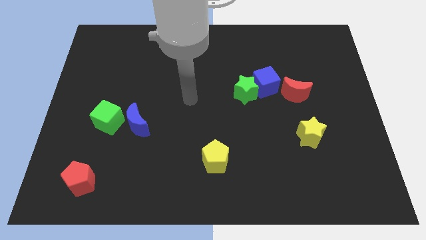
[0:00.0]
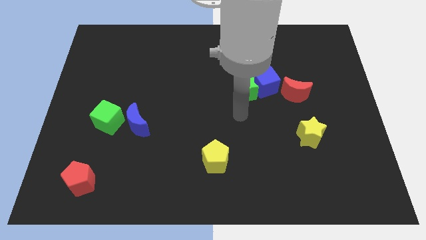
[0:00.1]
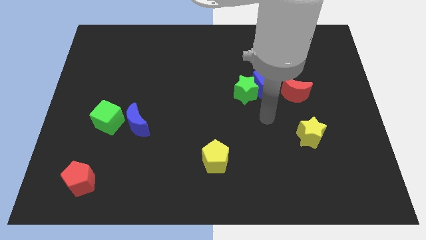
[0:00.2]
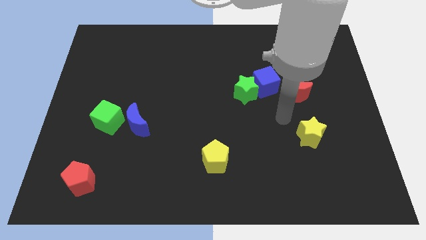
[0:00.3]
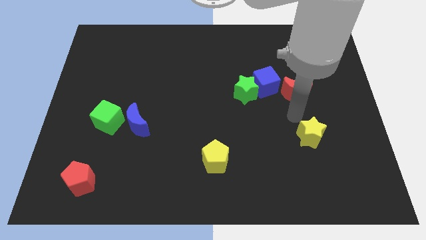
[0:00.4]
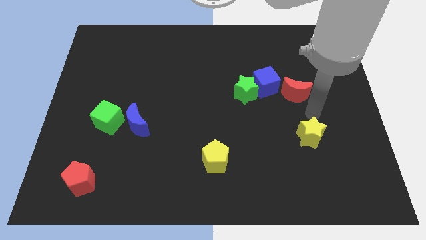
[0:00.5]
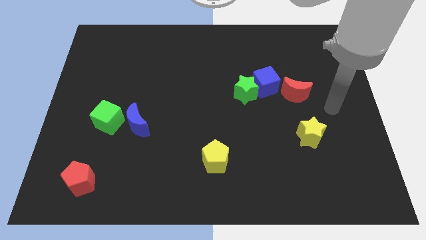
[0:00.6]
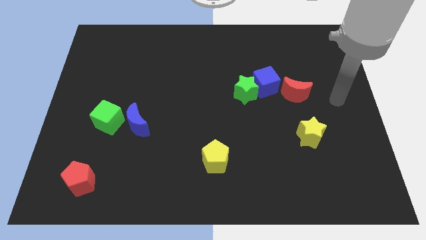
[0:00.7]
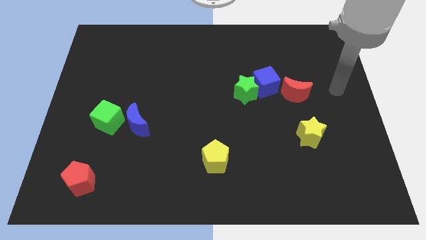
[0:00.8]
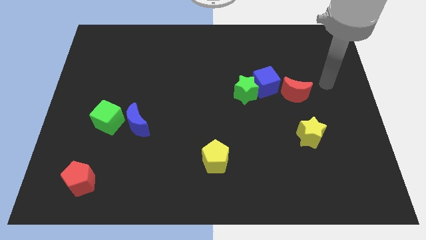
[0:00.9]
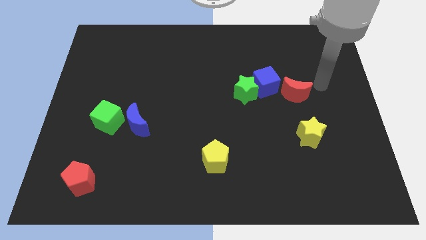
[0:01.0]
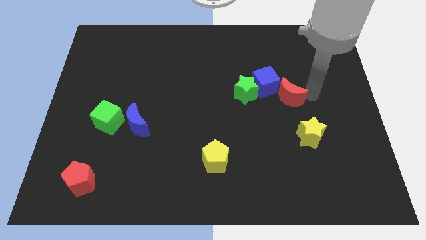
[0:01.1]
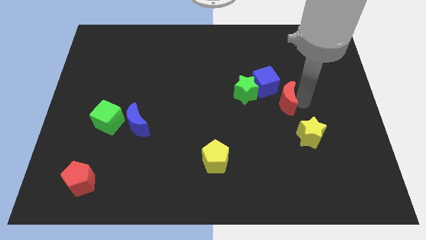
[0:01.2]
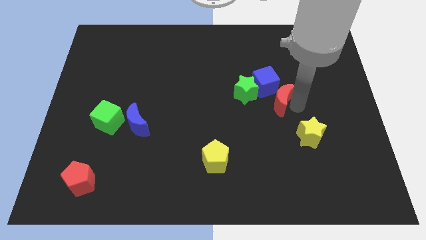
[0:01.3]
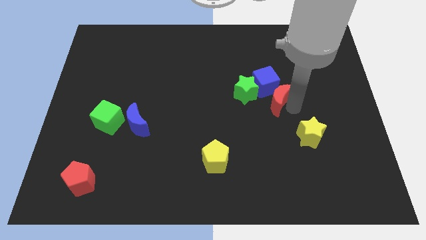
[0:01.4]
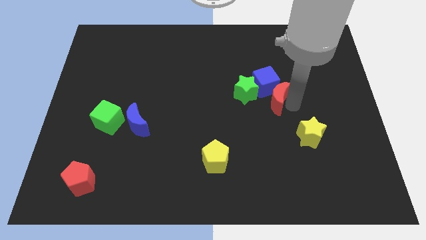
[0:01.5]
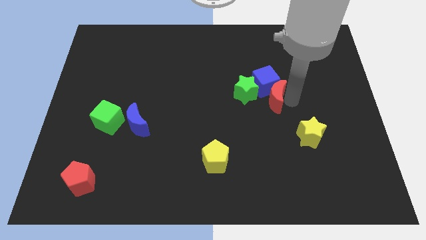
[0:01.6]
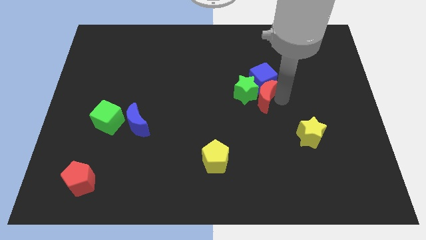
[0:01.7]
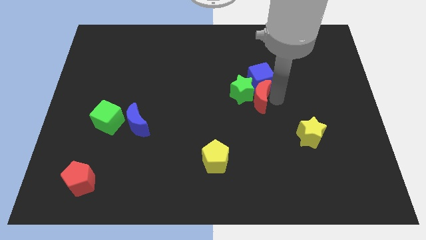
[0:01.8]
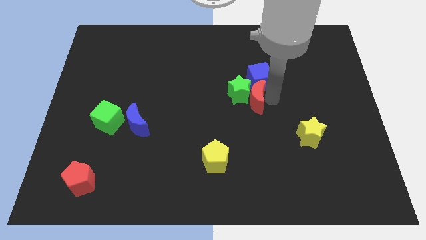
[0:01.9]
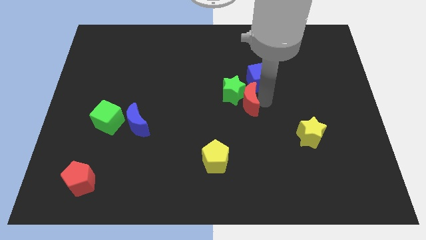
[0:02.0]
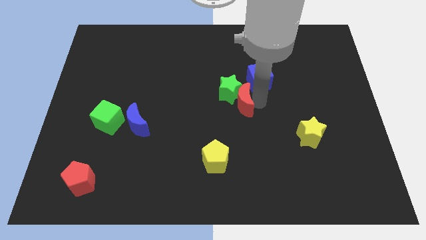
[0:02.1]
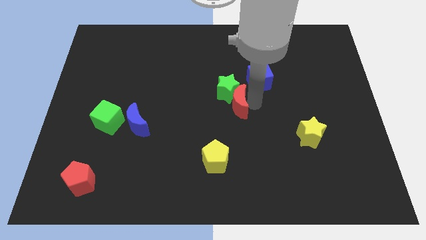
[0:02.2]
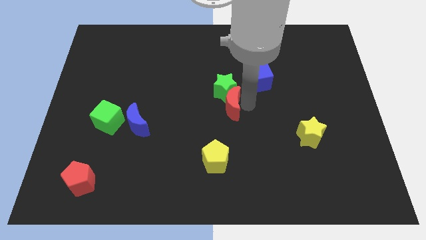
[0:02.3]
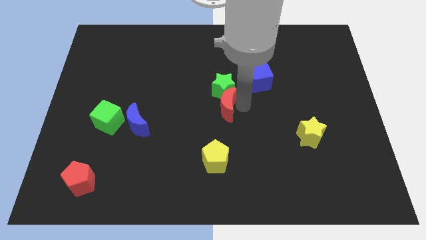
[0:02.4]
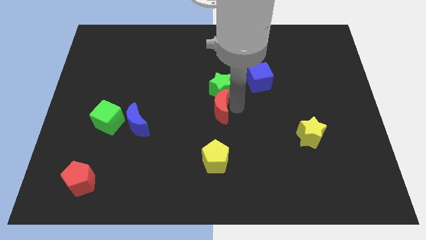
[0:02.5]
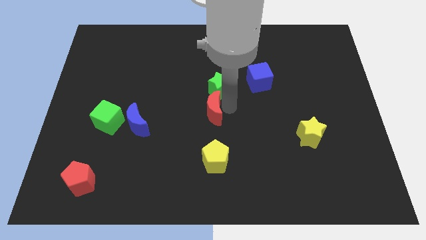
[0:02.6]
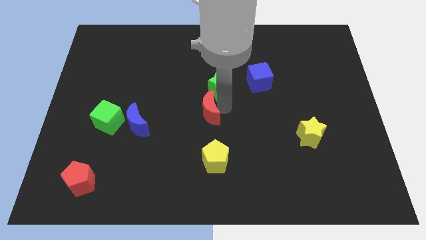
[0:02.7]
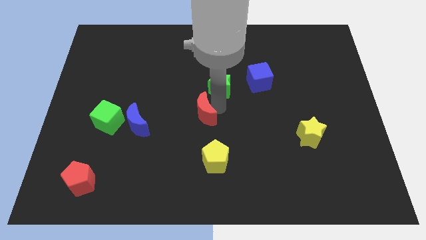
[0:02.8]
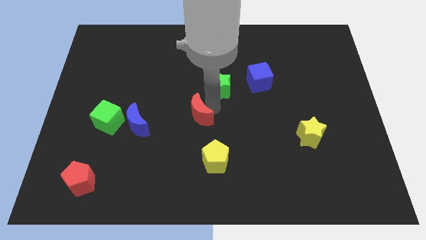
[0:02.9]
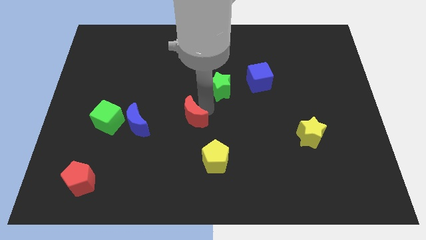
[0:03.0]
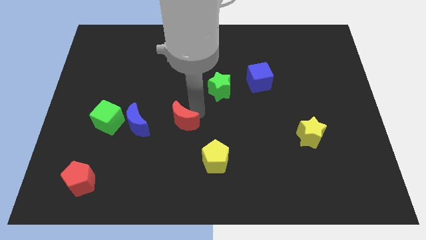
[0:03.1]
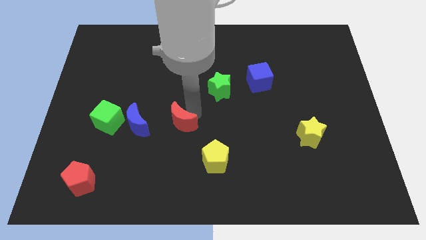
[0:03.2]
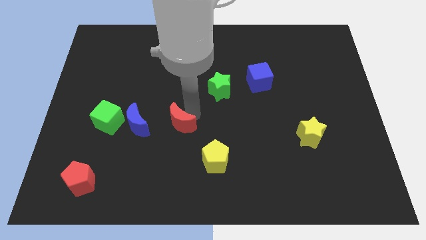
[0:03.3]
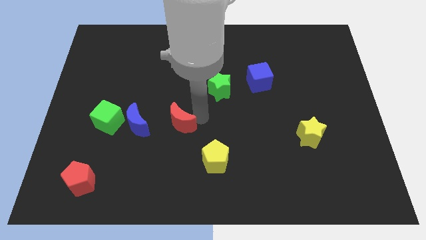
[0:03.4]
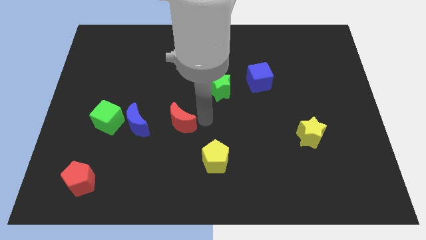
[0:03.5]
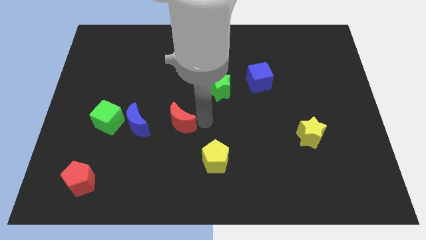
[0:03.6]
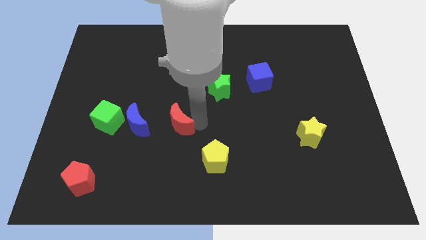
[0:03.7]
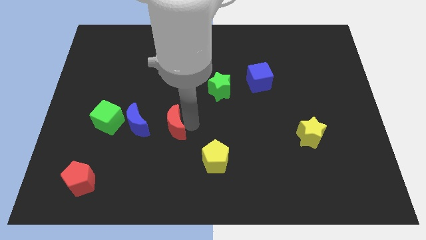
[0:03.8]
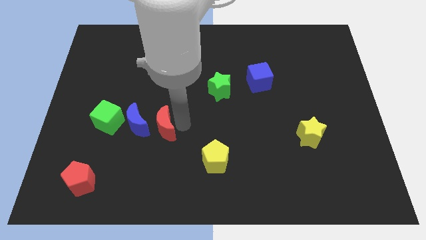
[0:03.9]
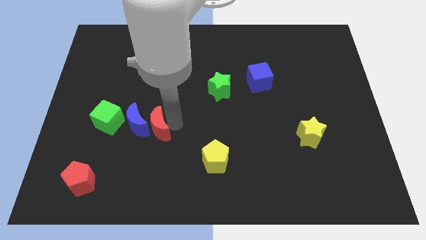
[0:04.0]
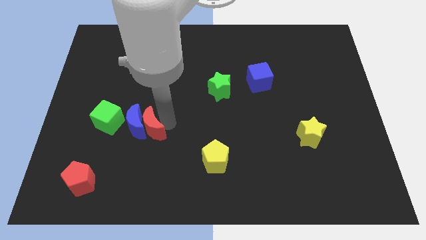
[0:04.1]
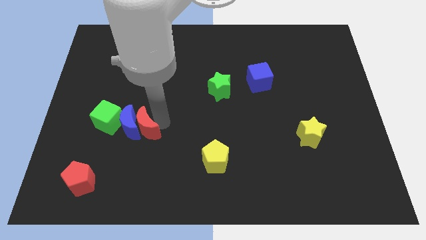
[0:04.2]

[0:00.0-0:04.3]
push the red moon close to the blue moon

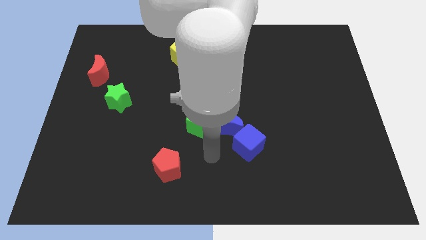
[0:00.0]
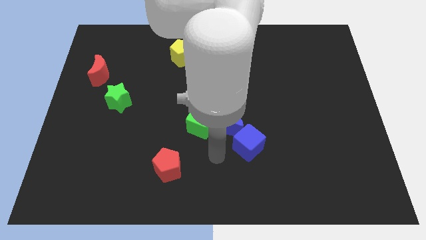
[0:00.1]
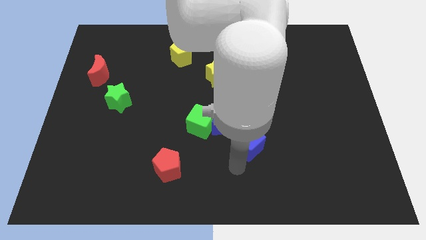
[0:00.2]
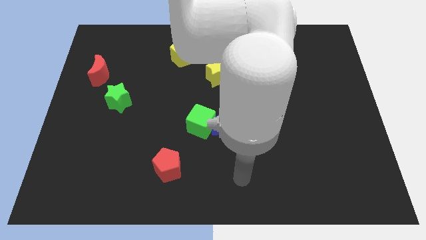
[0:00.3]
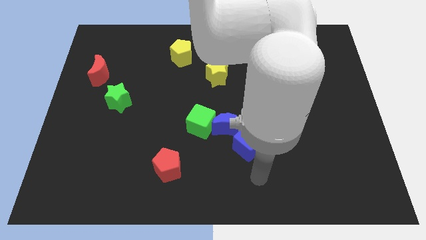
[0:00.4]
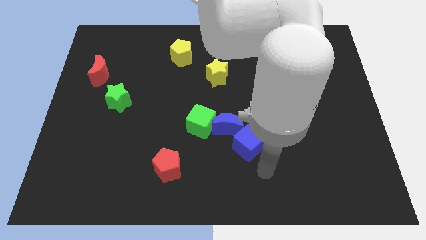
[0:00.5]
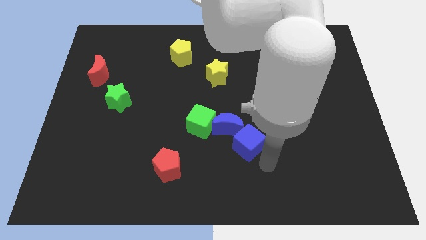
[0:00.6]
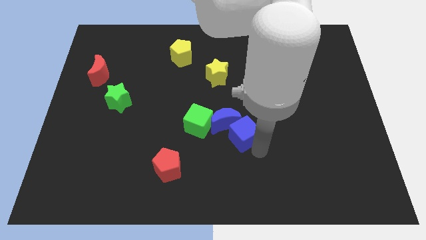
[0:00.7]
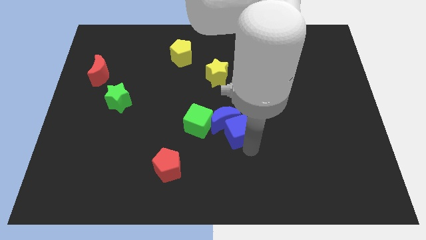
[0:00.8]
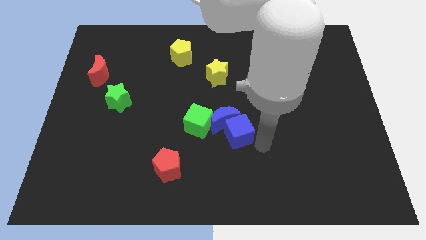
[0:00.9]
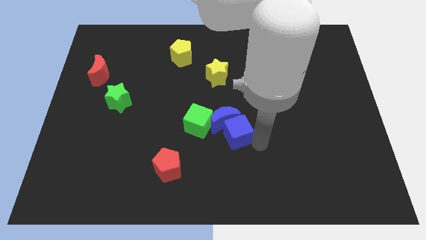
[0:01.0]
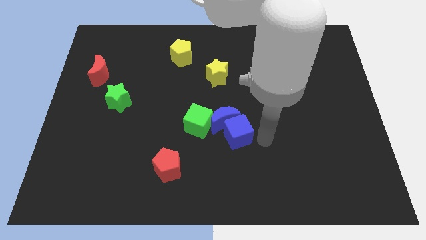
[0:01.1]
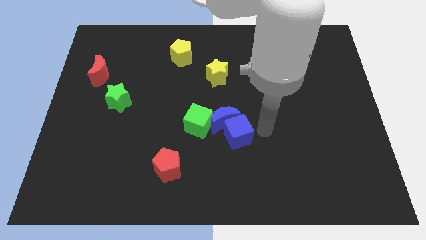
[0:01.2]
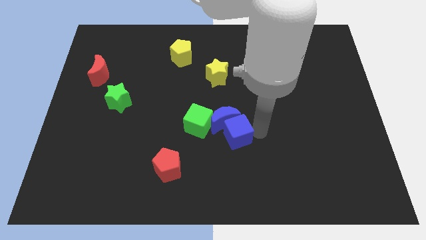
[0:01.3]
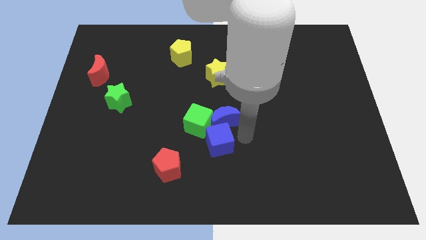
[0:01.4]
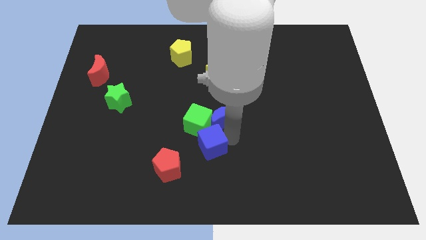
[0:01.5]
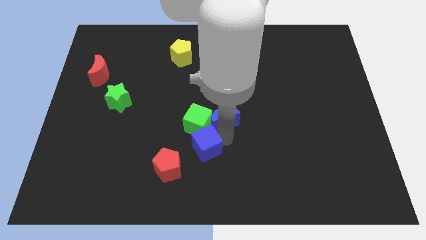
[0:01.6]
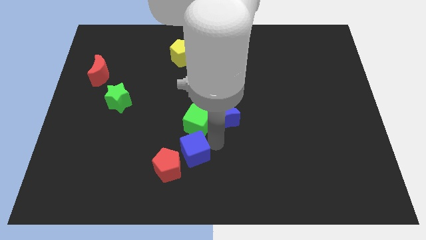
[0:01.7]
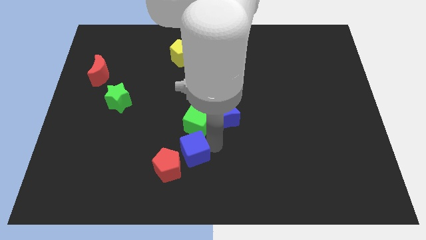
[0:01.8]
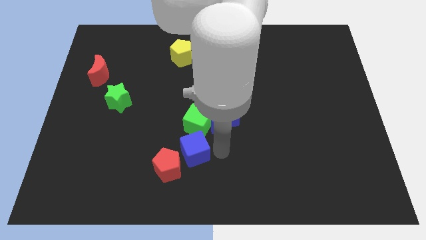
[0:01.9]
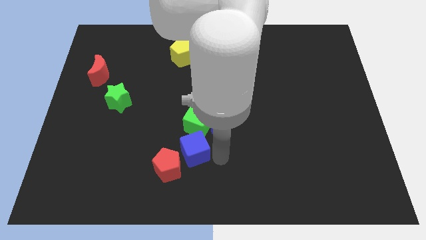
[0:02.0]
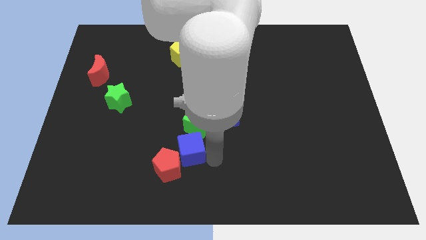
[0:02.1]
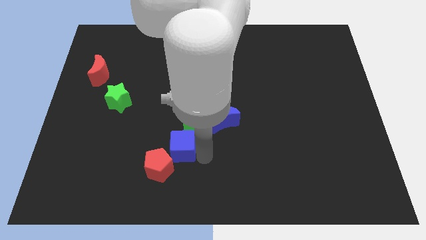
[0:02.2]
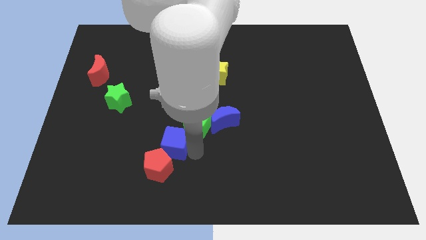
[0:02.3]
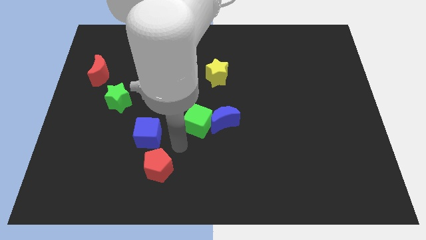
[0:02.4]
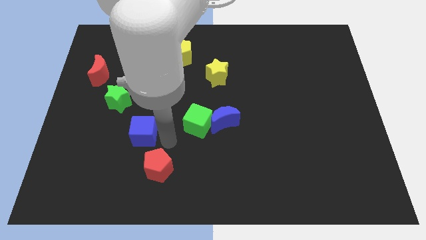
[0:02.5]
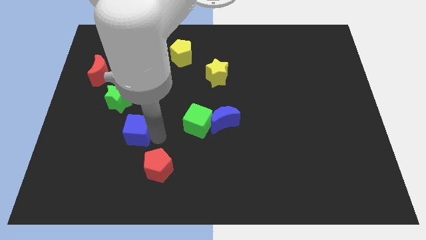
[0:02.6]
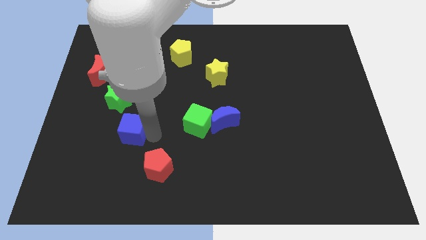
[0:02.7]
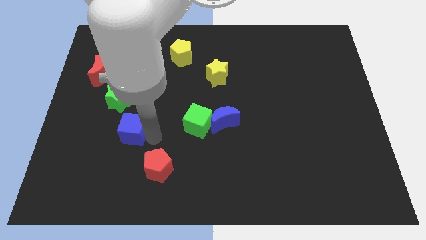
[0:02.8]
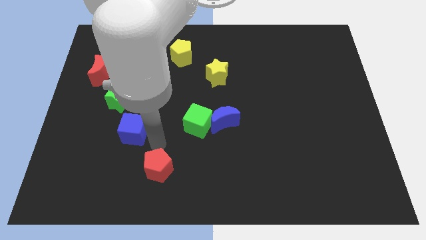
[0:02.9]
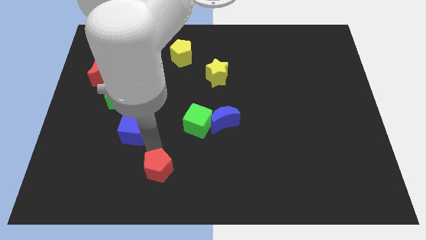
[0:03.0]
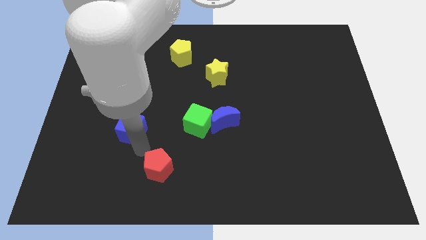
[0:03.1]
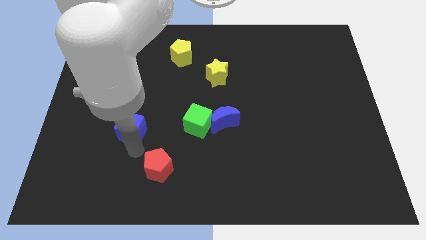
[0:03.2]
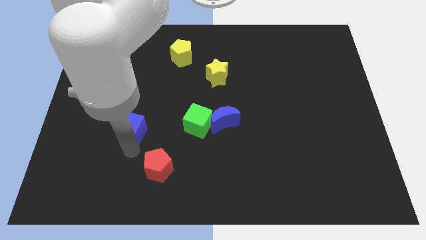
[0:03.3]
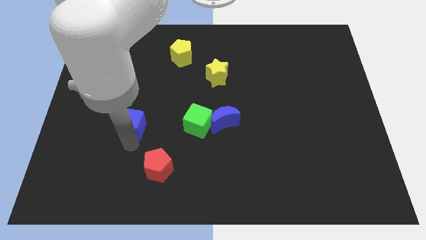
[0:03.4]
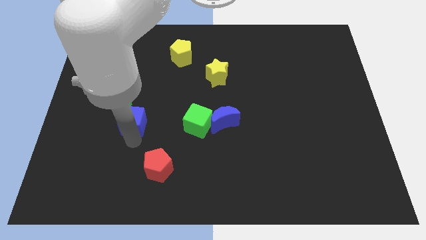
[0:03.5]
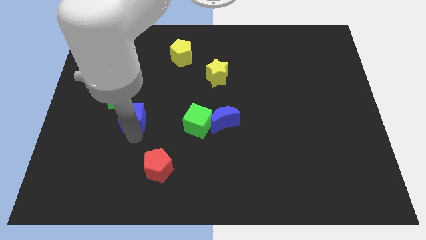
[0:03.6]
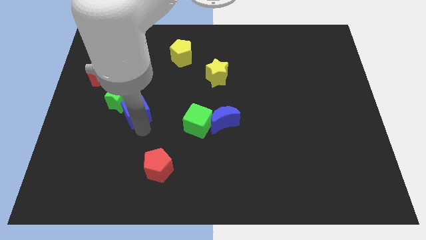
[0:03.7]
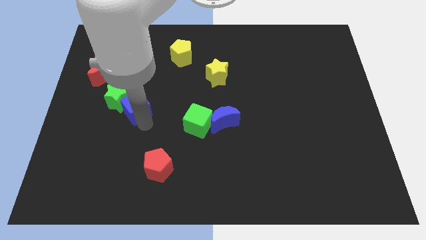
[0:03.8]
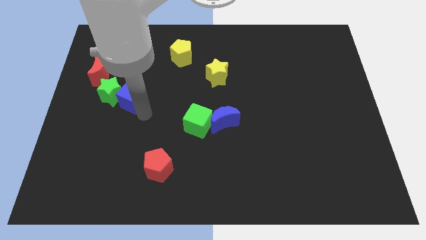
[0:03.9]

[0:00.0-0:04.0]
push the blue cube to the green star
